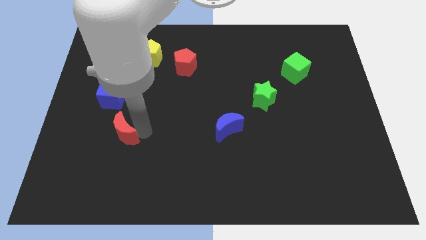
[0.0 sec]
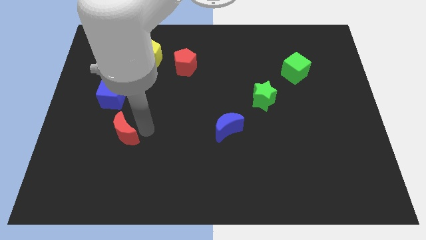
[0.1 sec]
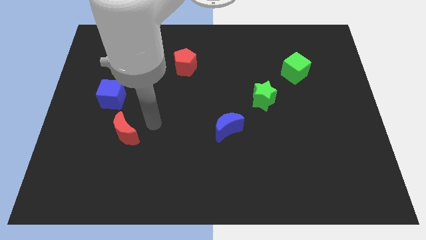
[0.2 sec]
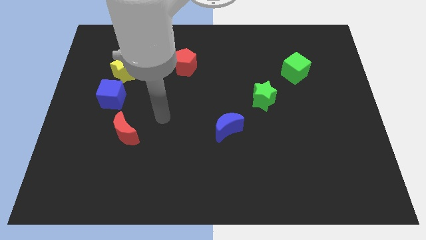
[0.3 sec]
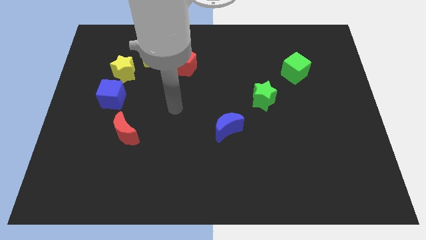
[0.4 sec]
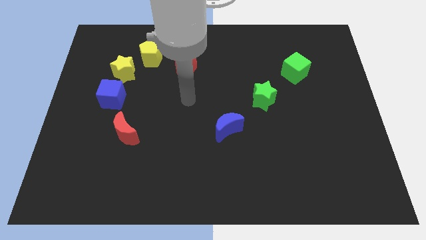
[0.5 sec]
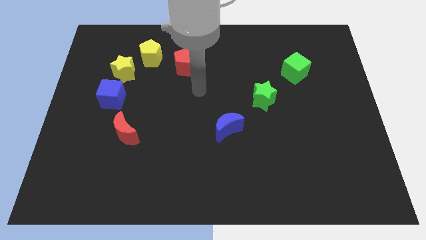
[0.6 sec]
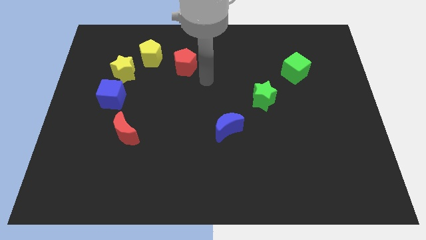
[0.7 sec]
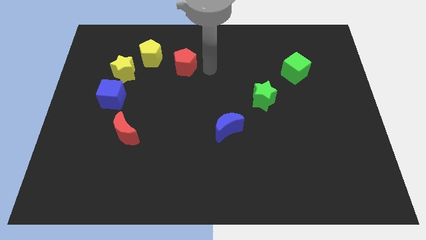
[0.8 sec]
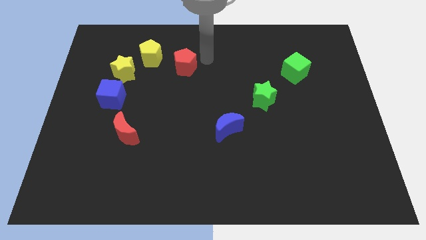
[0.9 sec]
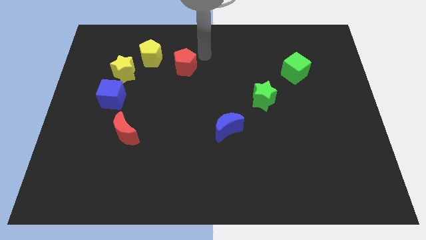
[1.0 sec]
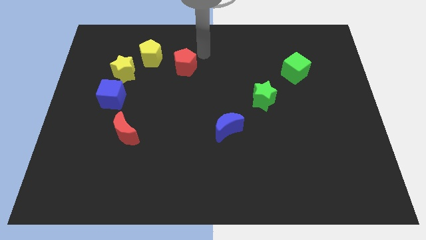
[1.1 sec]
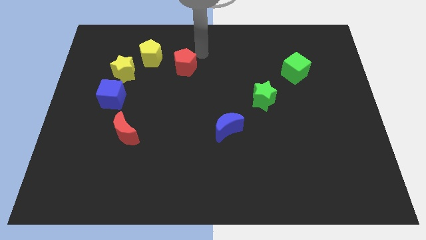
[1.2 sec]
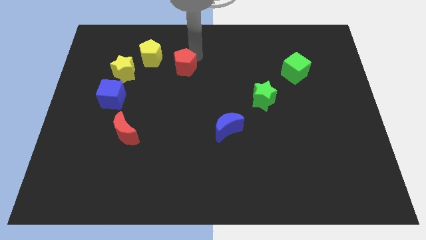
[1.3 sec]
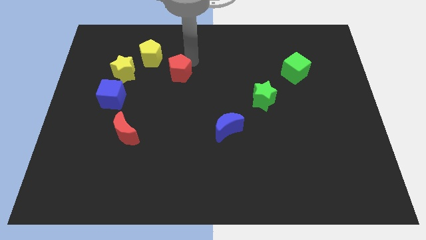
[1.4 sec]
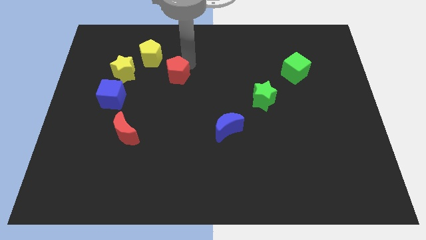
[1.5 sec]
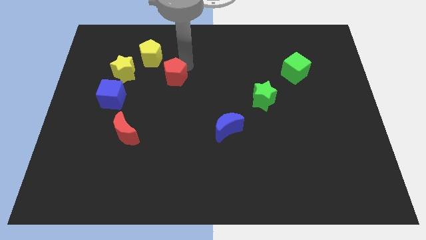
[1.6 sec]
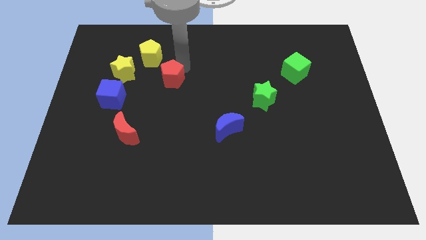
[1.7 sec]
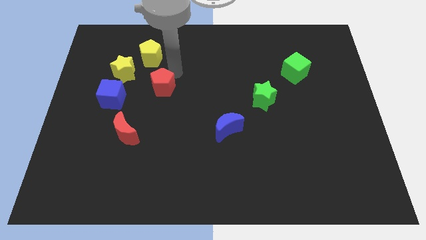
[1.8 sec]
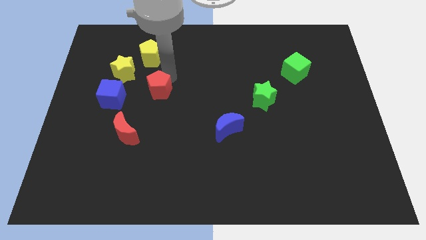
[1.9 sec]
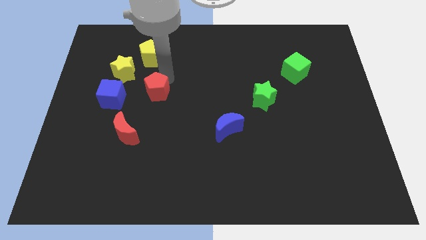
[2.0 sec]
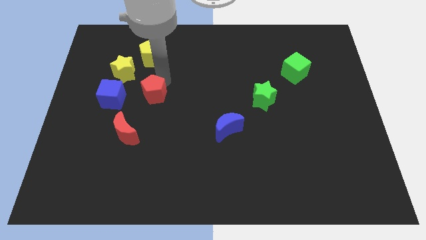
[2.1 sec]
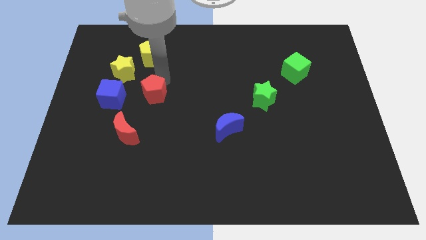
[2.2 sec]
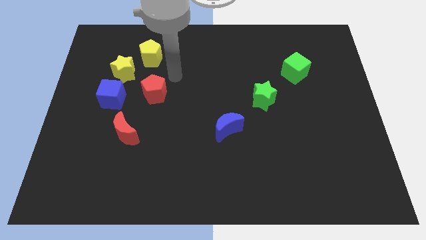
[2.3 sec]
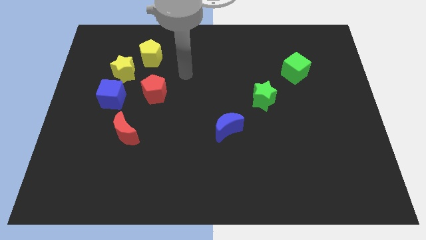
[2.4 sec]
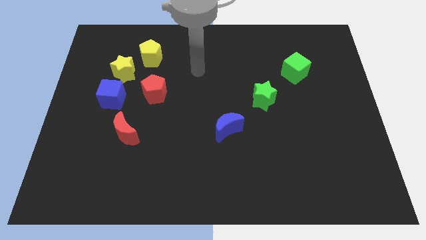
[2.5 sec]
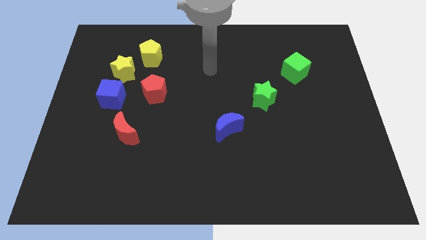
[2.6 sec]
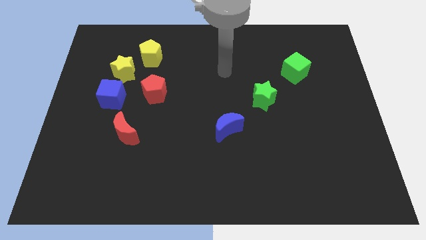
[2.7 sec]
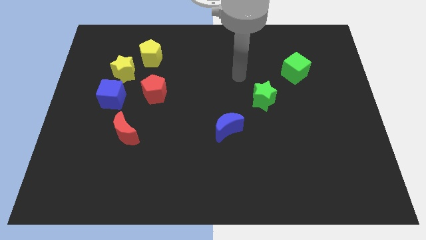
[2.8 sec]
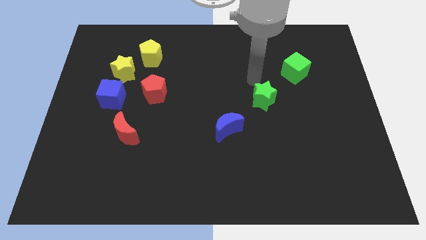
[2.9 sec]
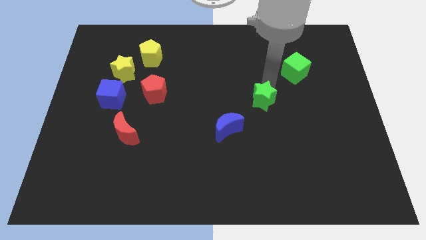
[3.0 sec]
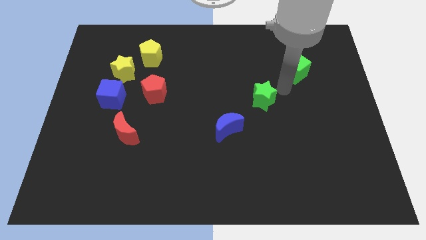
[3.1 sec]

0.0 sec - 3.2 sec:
drag the red pentagon diagonally bottom right to the yellow star

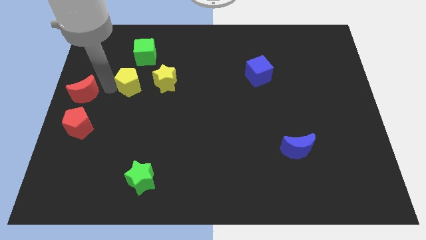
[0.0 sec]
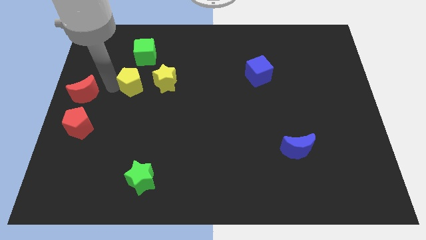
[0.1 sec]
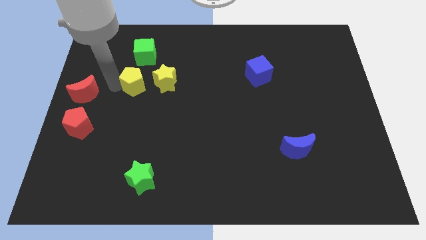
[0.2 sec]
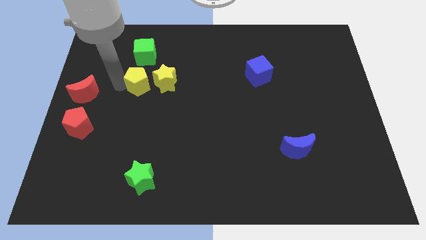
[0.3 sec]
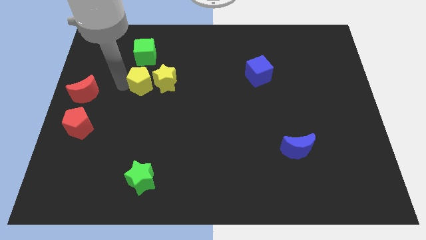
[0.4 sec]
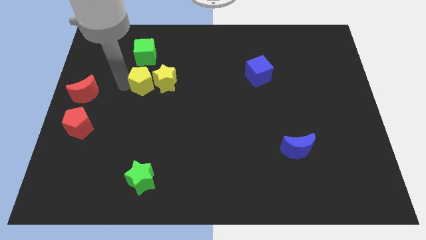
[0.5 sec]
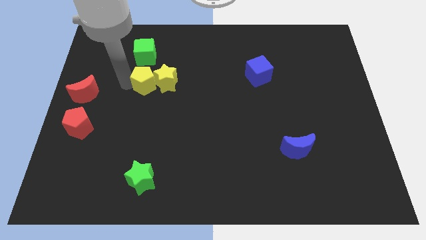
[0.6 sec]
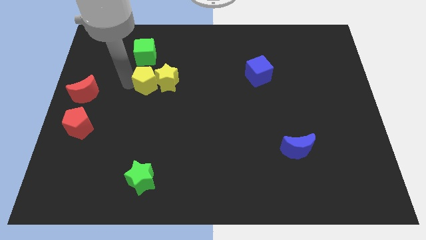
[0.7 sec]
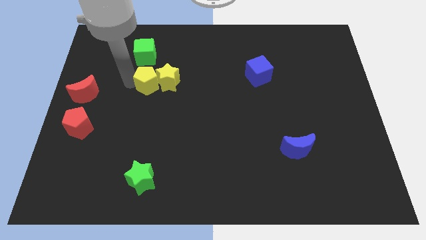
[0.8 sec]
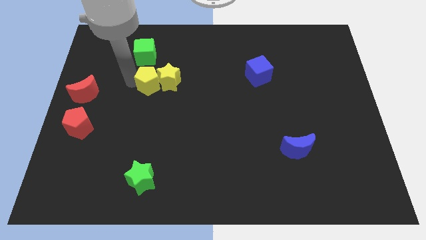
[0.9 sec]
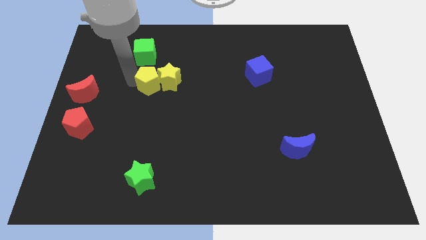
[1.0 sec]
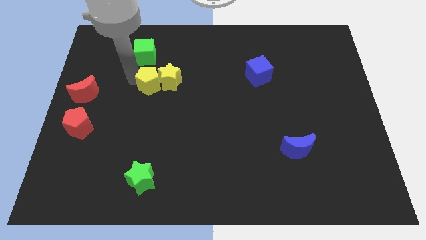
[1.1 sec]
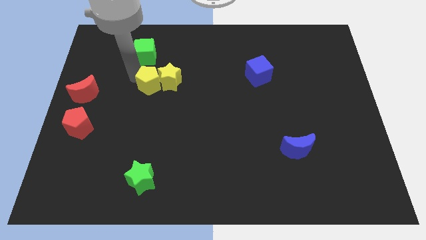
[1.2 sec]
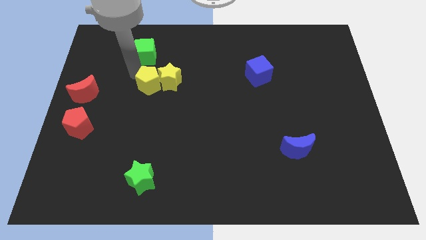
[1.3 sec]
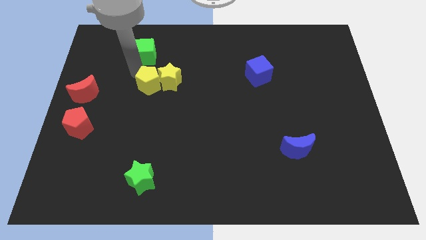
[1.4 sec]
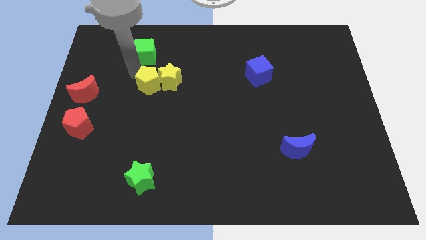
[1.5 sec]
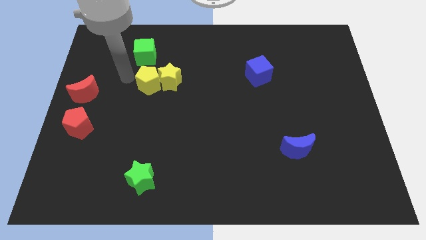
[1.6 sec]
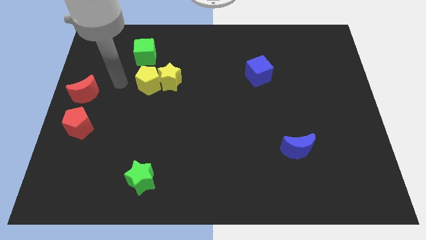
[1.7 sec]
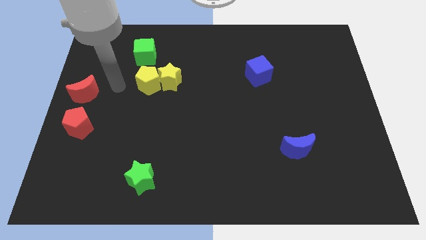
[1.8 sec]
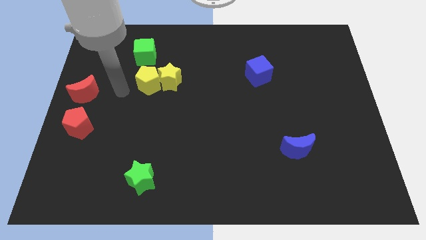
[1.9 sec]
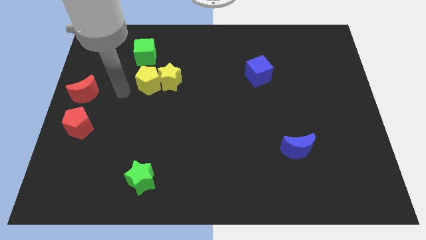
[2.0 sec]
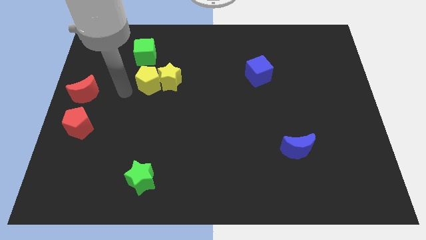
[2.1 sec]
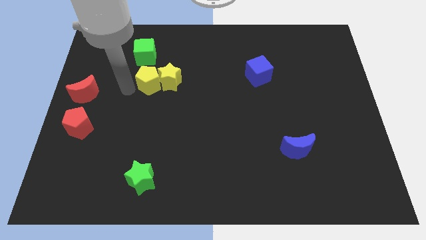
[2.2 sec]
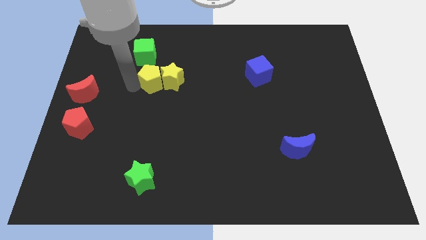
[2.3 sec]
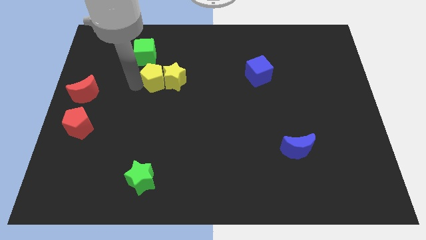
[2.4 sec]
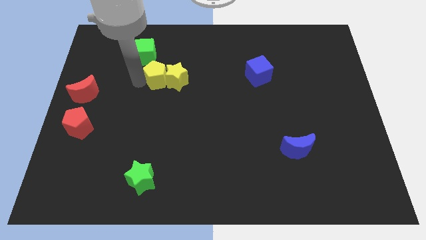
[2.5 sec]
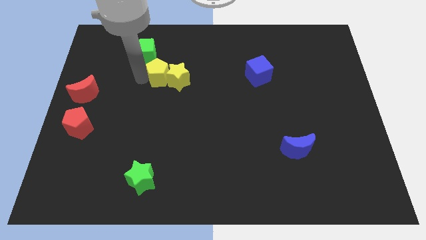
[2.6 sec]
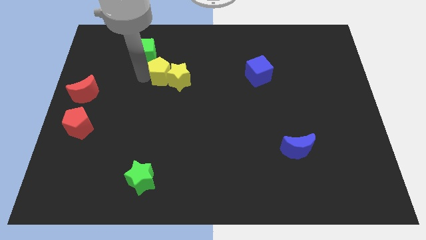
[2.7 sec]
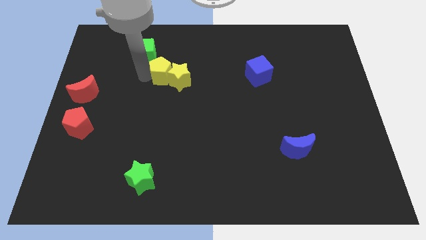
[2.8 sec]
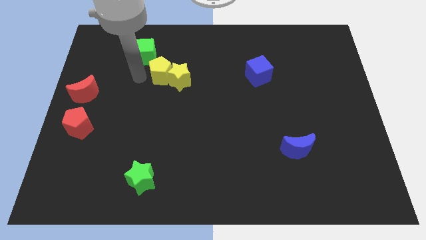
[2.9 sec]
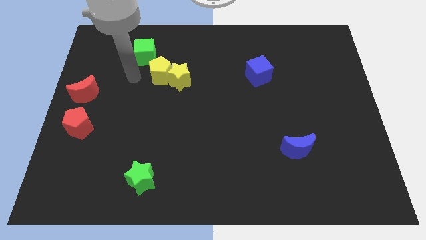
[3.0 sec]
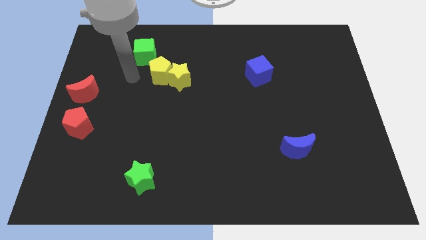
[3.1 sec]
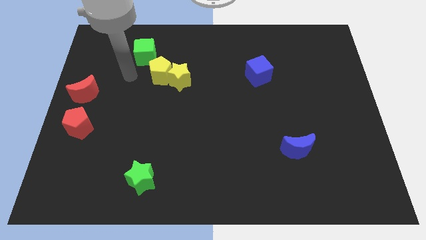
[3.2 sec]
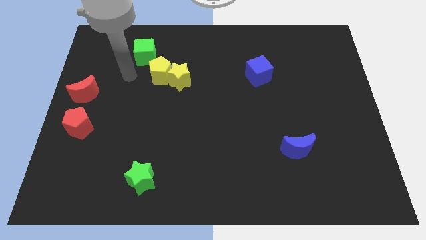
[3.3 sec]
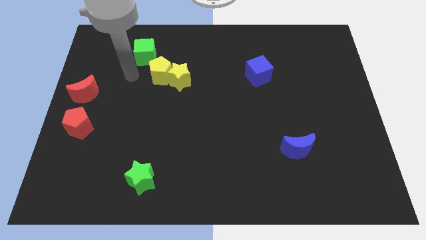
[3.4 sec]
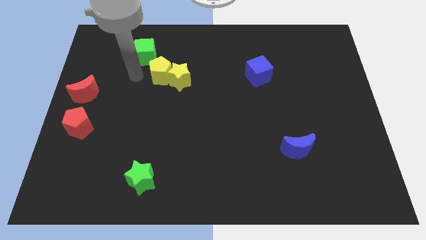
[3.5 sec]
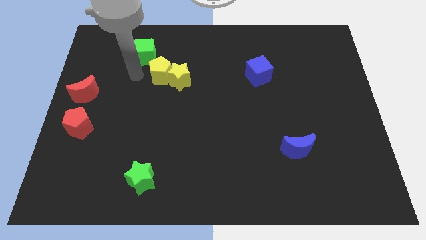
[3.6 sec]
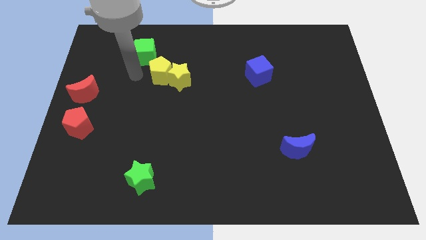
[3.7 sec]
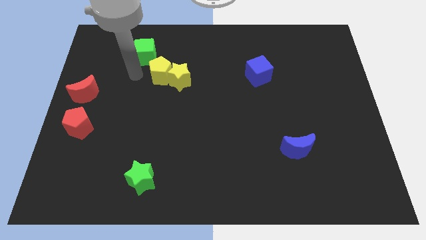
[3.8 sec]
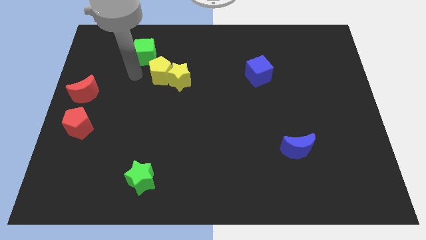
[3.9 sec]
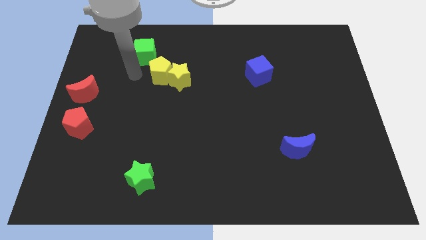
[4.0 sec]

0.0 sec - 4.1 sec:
push both the yellow blocks towards the center of the board

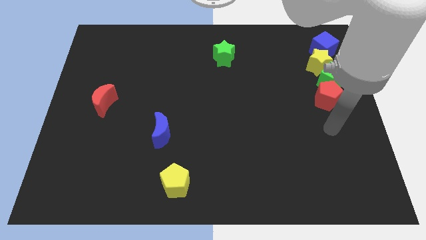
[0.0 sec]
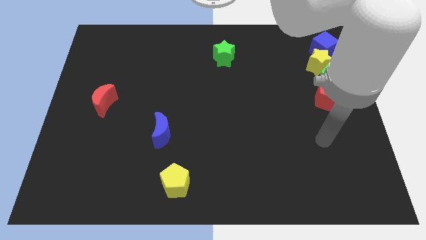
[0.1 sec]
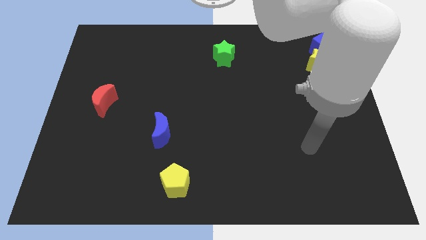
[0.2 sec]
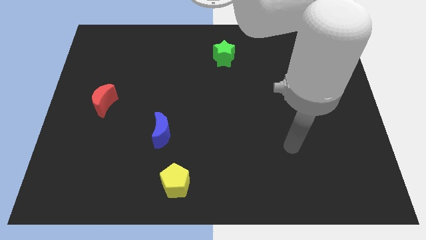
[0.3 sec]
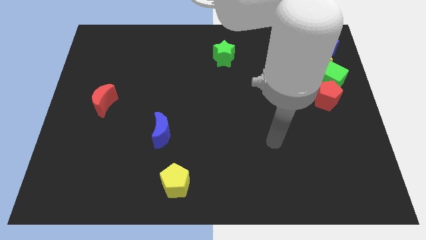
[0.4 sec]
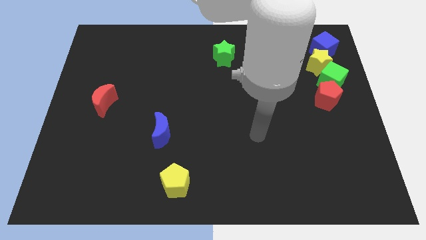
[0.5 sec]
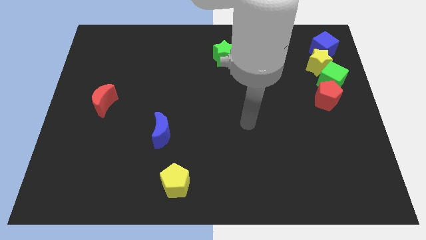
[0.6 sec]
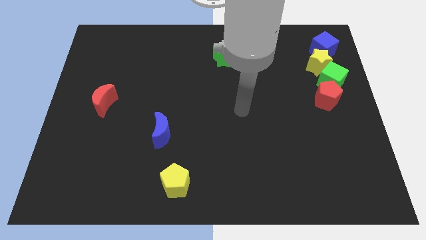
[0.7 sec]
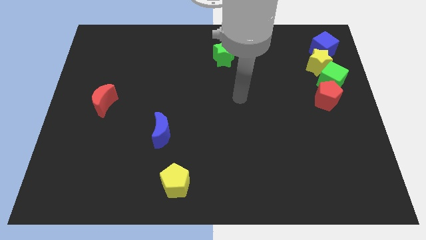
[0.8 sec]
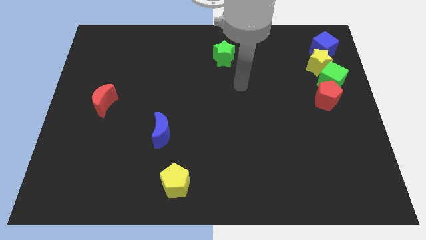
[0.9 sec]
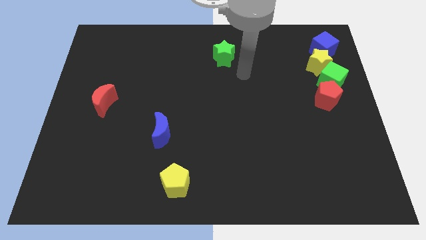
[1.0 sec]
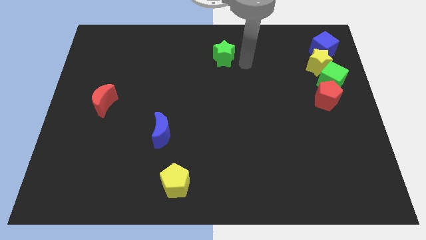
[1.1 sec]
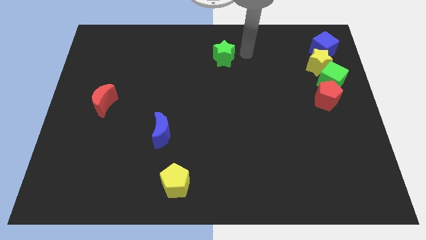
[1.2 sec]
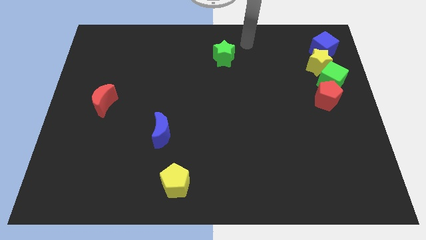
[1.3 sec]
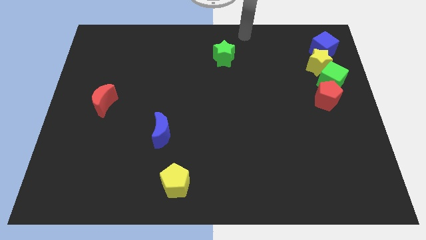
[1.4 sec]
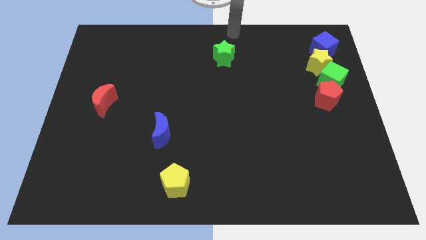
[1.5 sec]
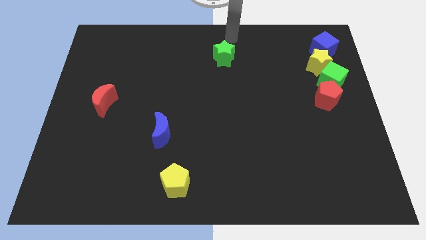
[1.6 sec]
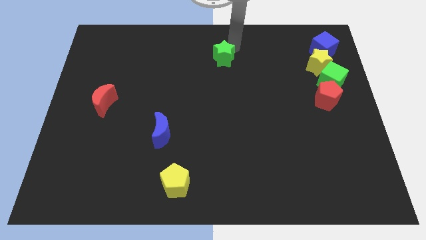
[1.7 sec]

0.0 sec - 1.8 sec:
move away from the red pentagon
